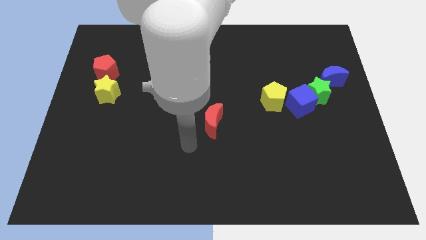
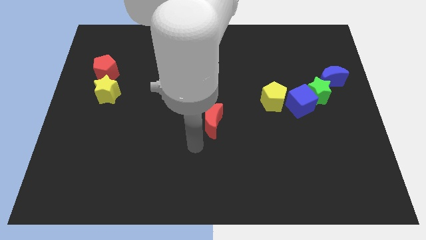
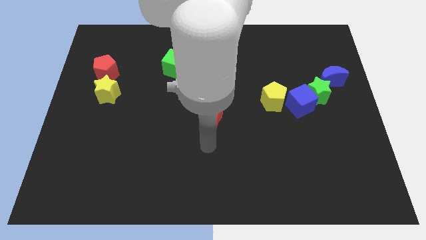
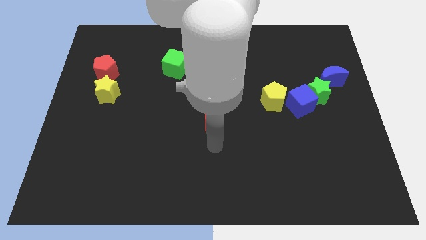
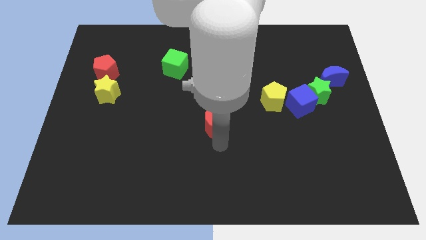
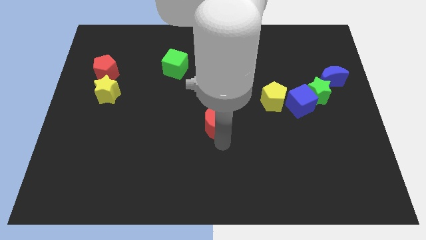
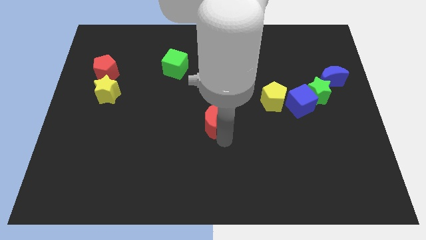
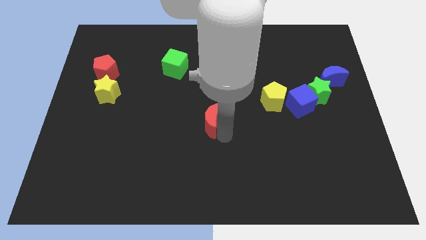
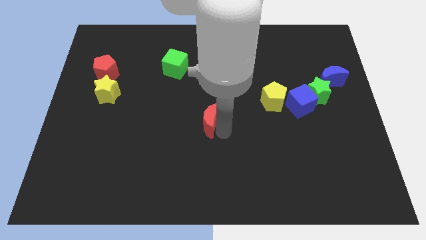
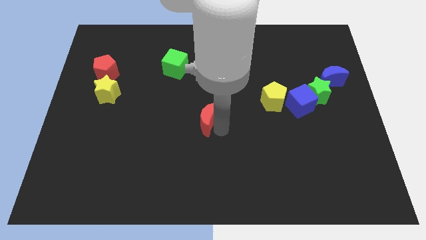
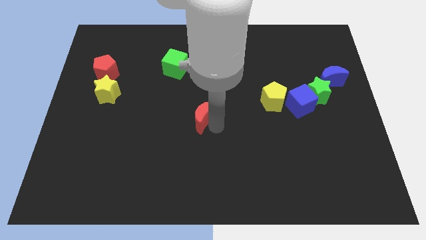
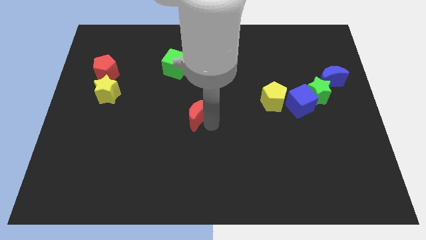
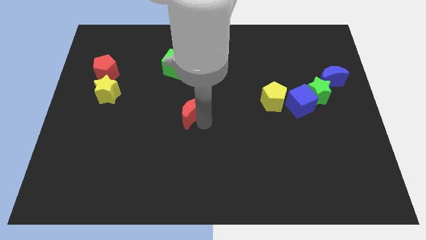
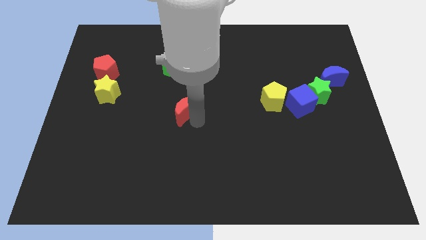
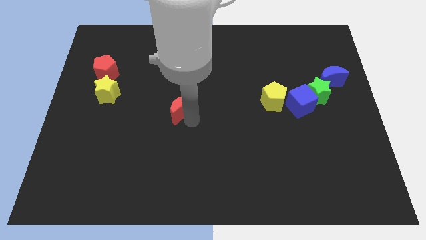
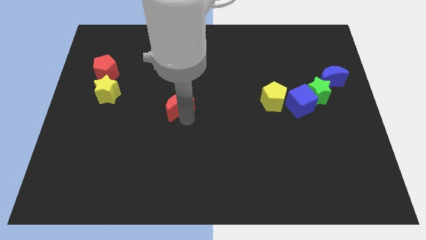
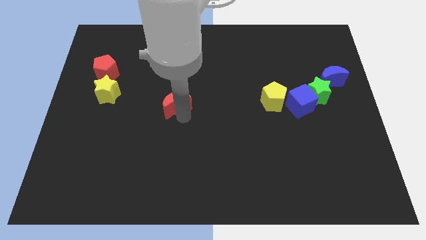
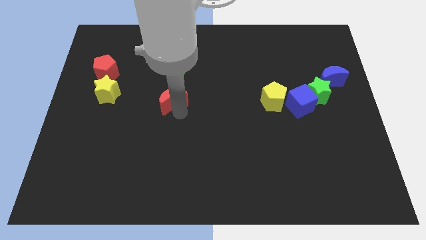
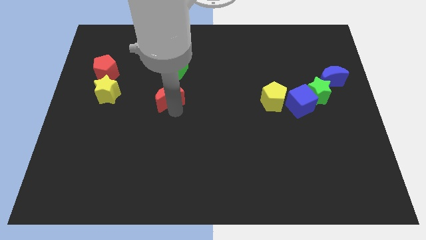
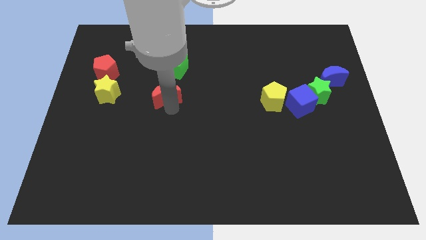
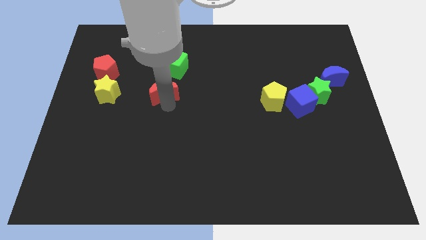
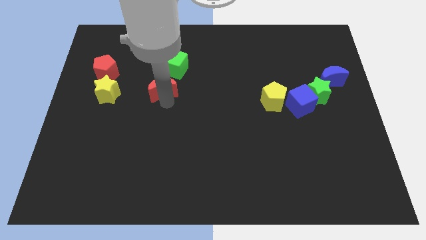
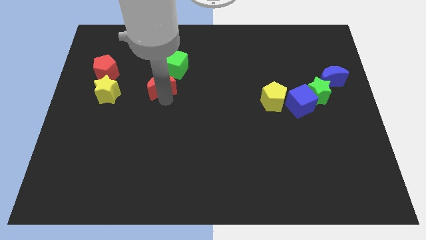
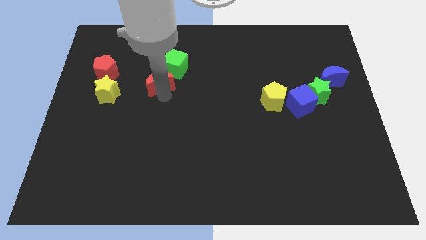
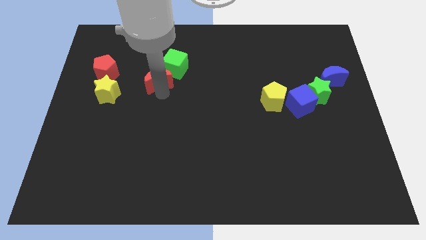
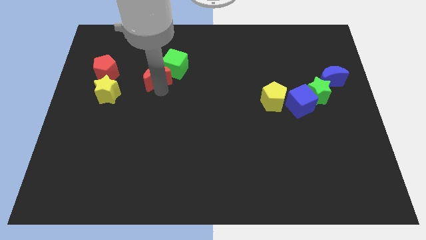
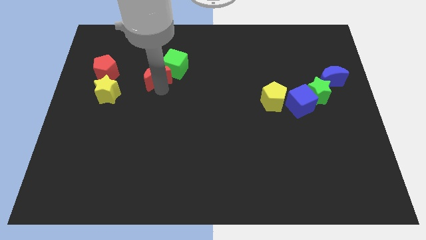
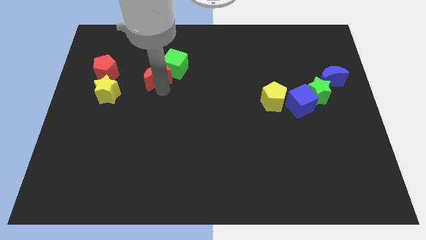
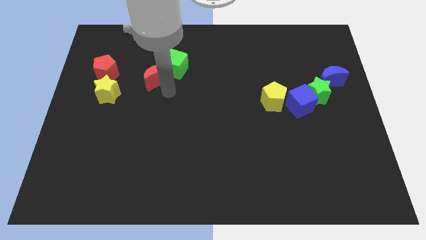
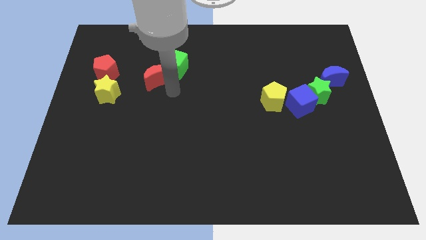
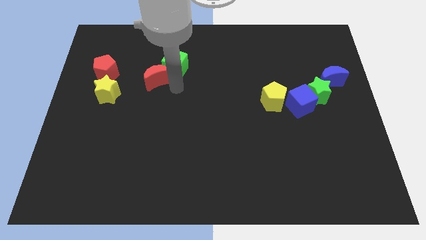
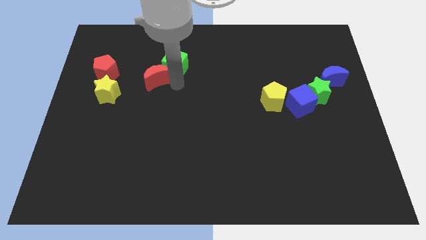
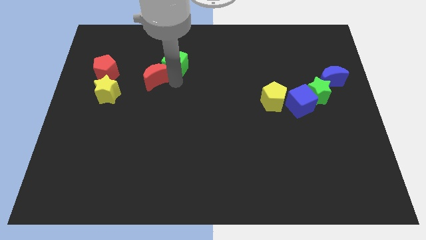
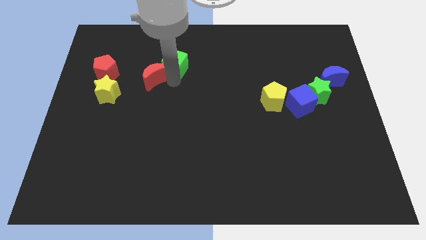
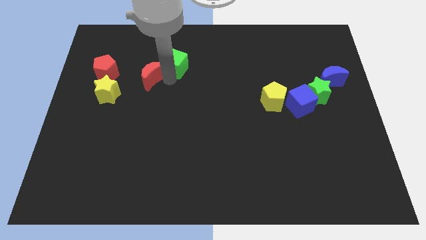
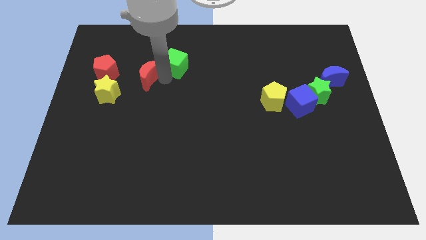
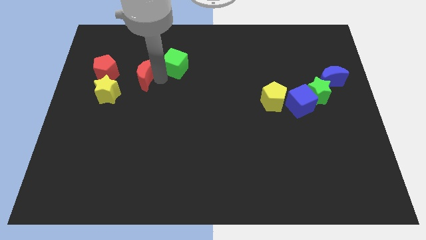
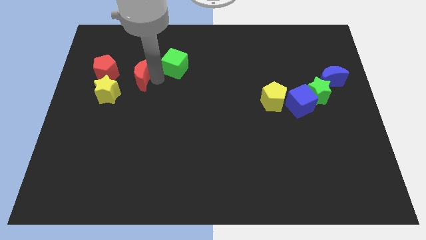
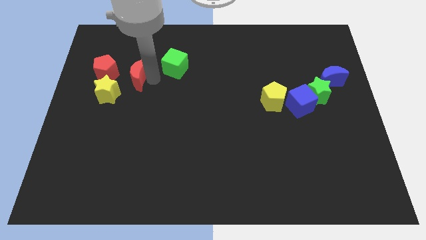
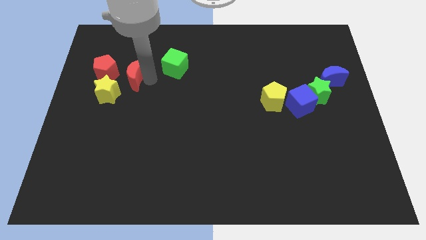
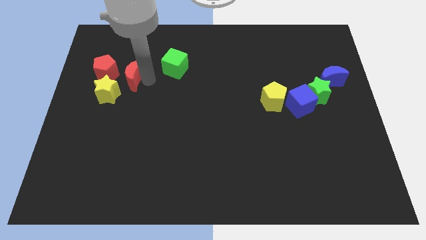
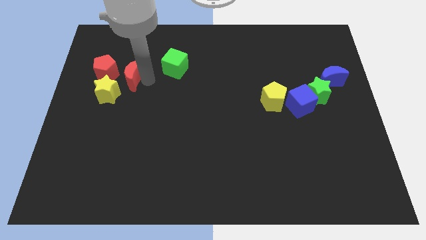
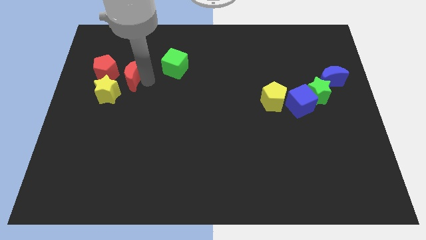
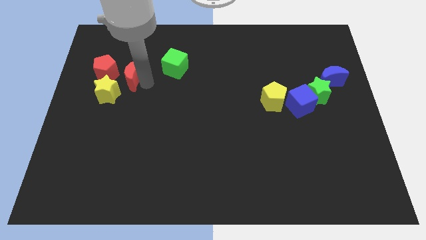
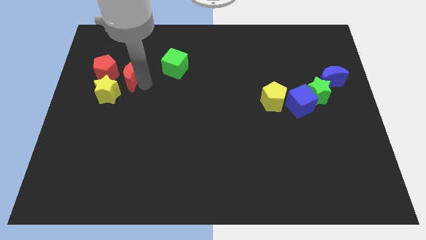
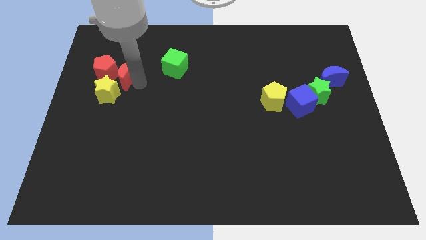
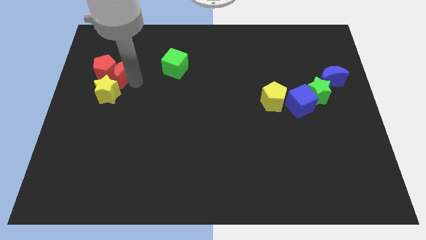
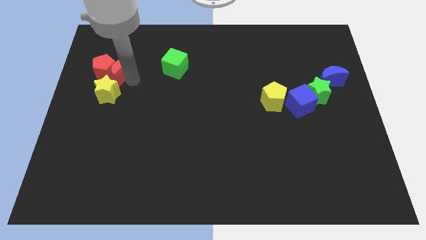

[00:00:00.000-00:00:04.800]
push the red moon close to the red pentagon

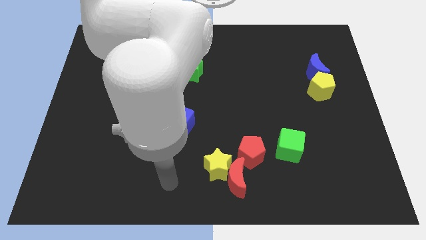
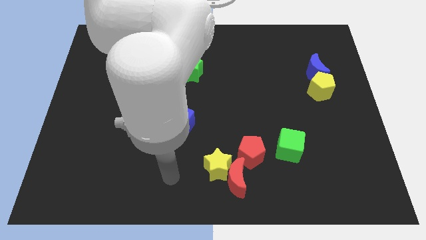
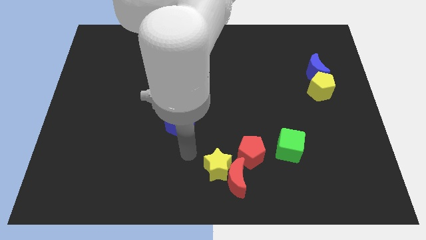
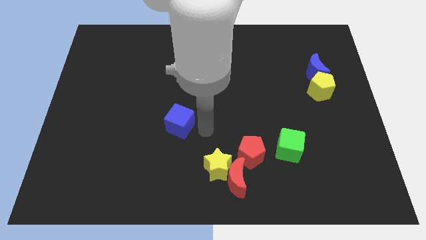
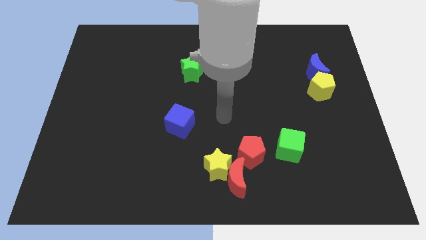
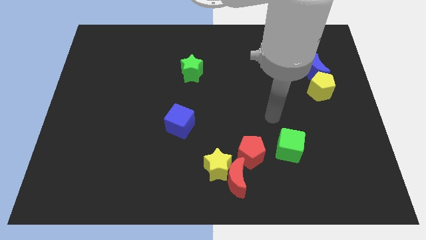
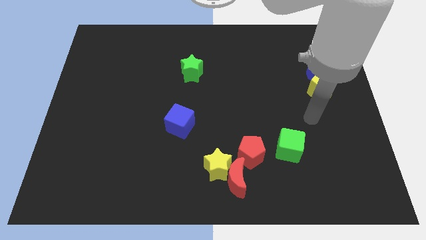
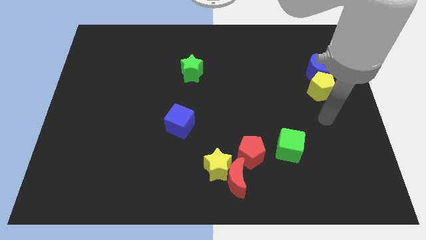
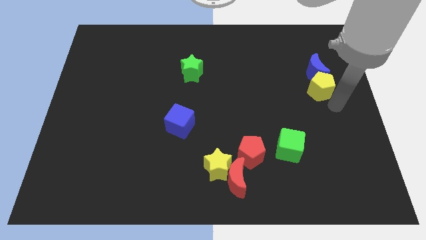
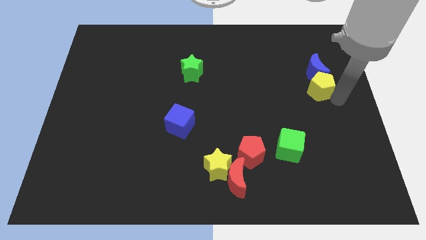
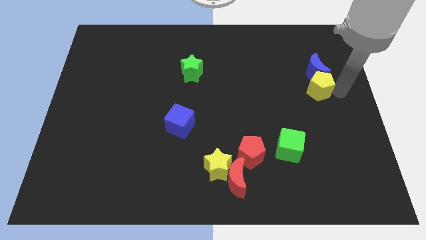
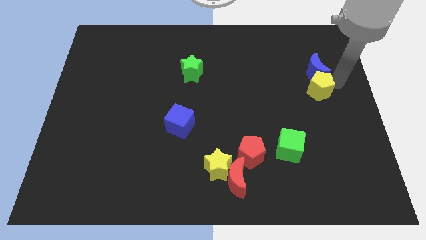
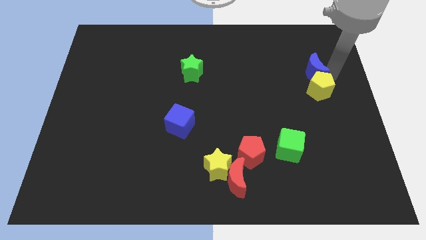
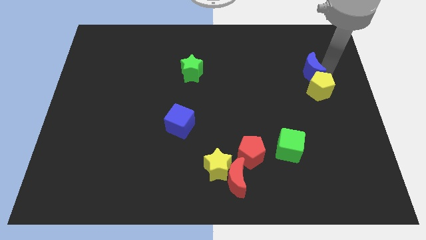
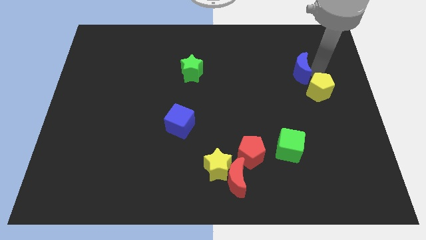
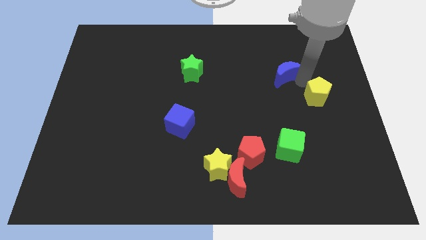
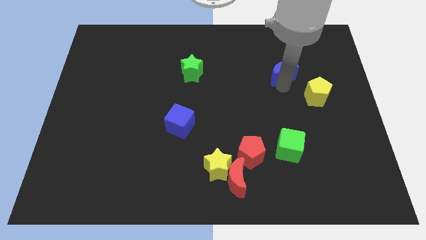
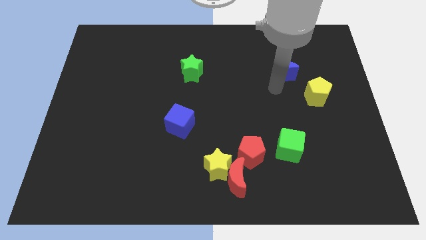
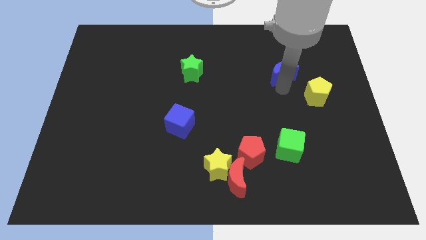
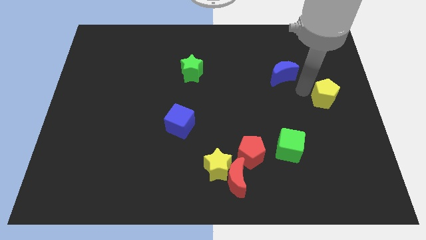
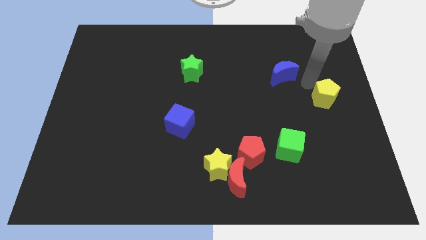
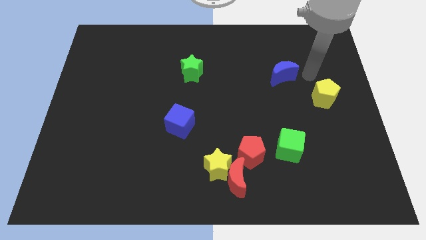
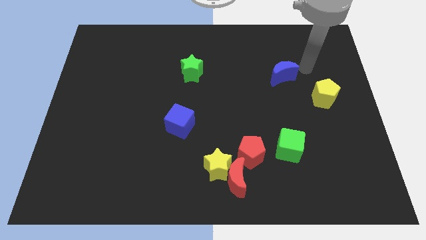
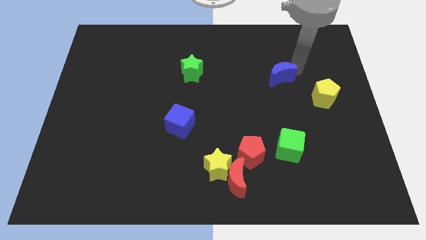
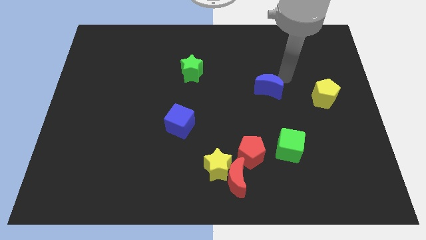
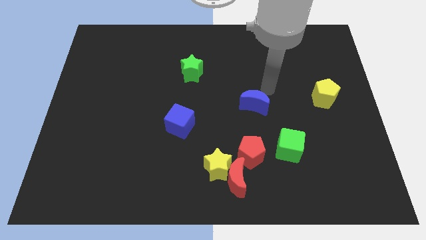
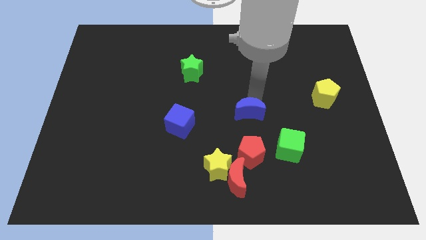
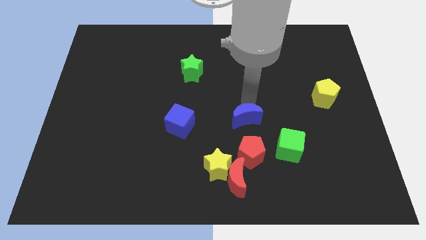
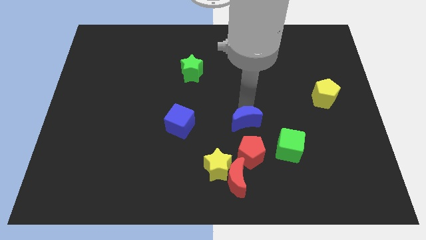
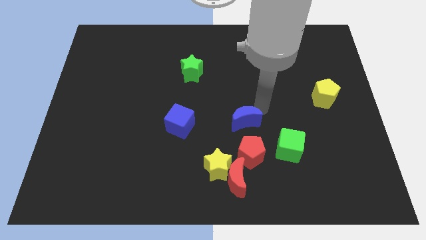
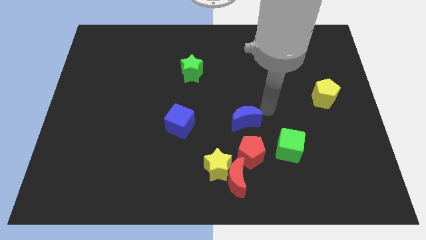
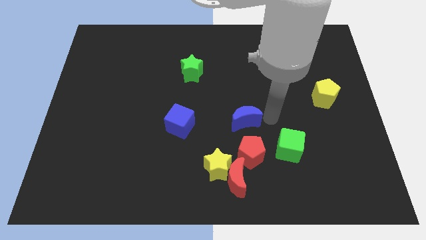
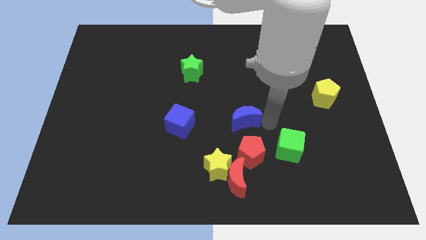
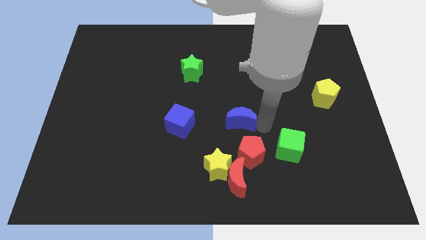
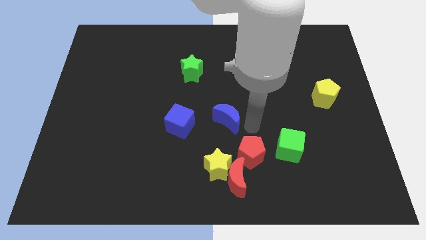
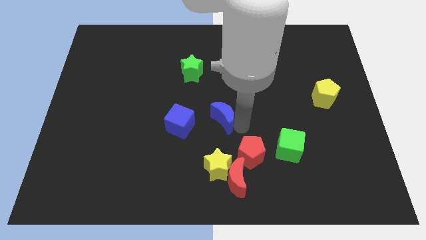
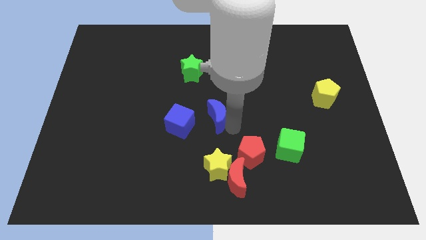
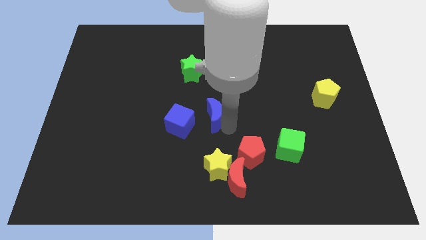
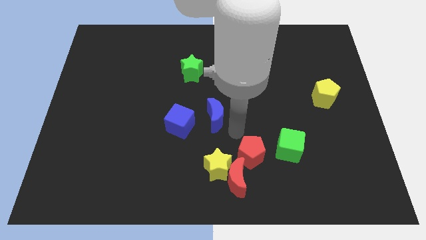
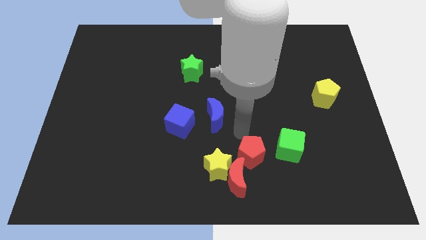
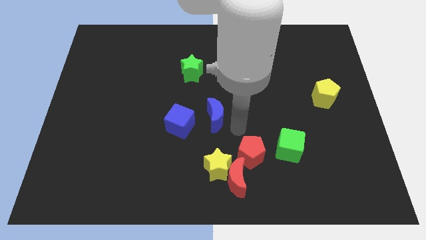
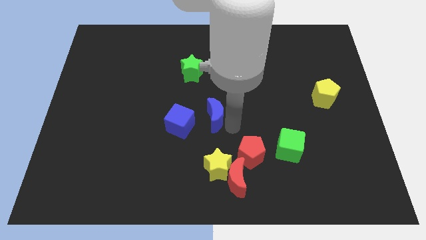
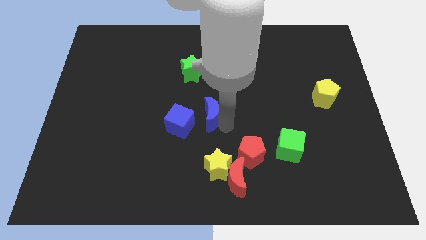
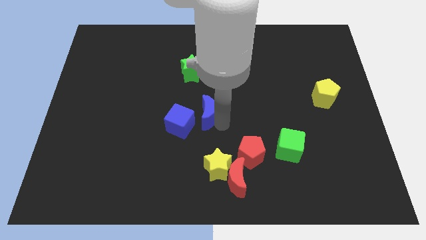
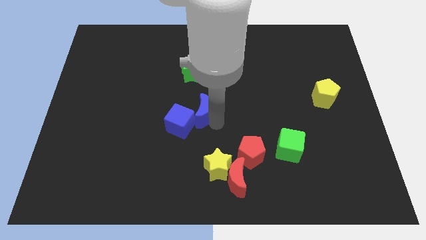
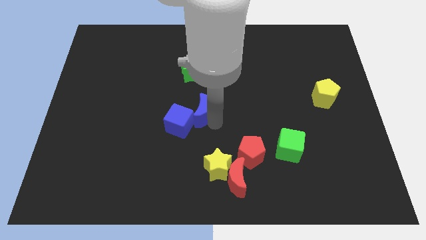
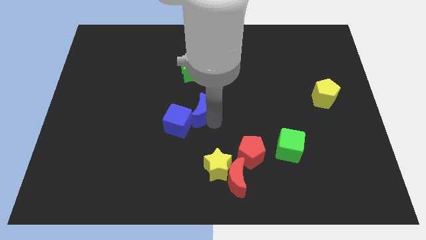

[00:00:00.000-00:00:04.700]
put the blue moon to the blue cube
